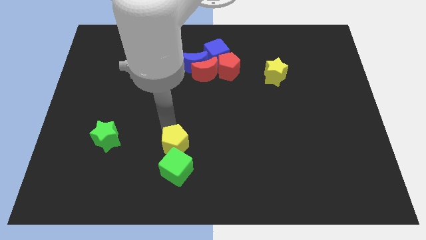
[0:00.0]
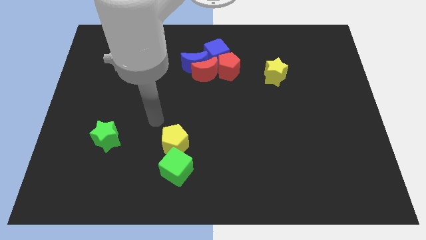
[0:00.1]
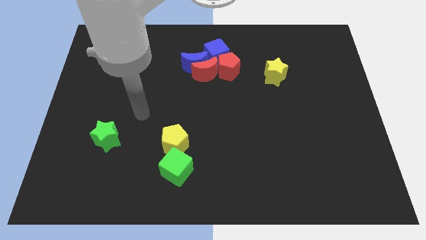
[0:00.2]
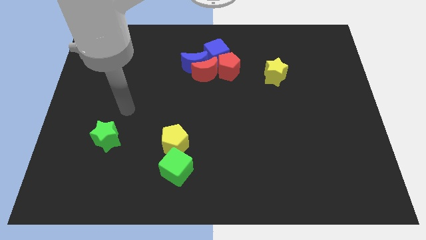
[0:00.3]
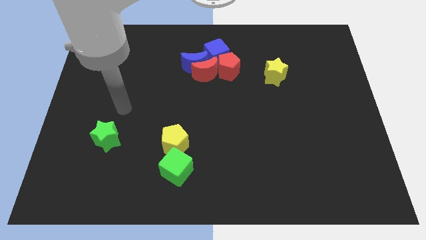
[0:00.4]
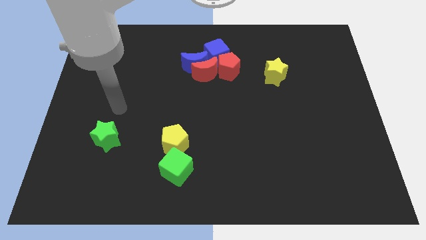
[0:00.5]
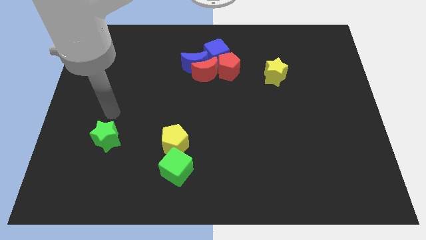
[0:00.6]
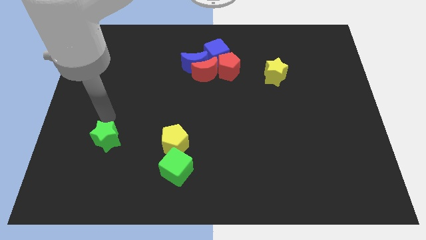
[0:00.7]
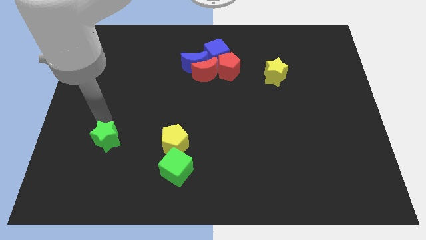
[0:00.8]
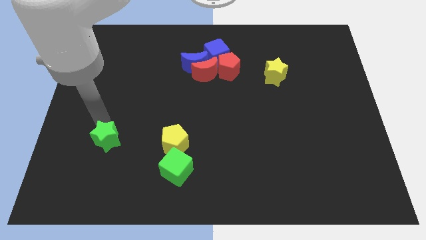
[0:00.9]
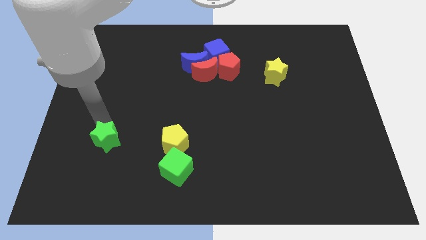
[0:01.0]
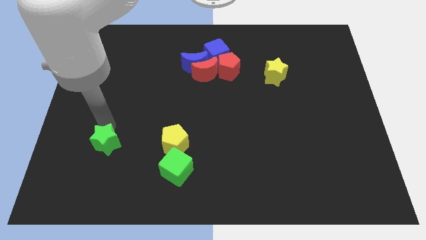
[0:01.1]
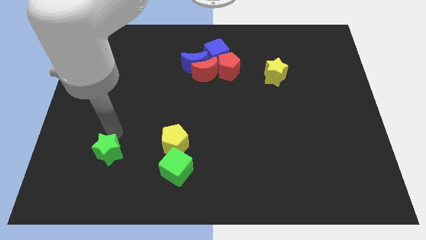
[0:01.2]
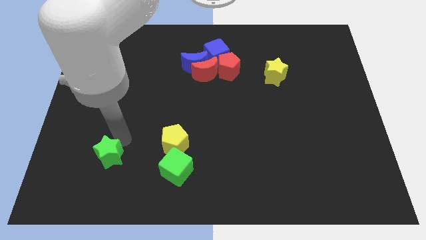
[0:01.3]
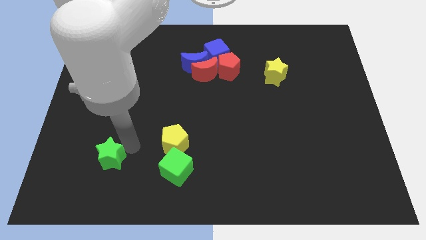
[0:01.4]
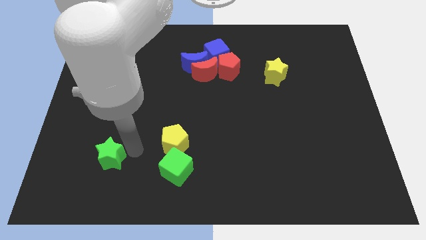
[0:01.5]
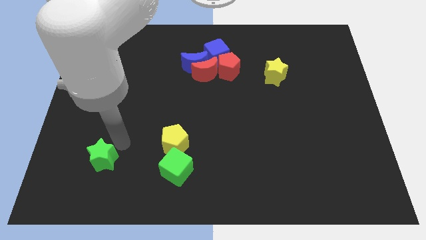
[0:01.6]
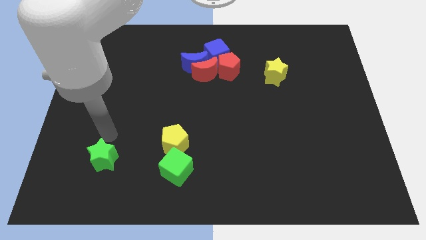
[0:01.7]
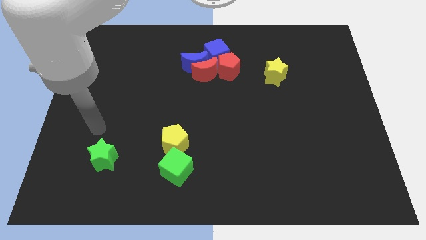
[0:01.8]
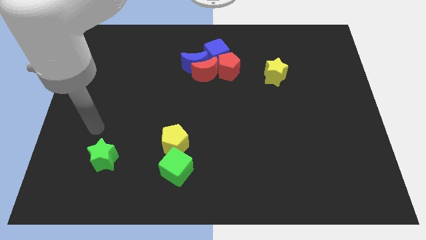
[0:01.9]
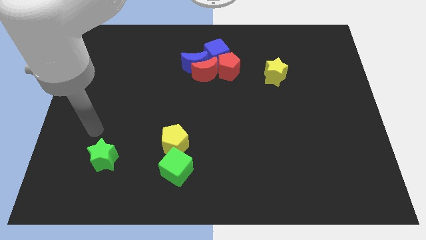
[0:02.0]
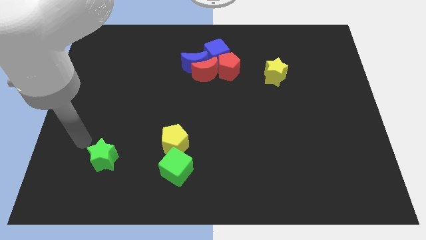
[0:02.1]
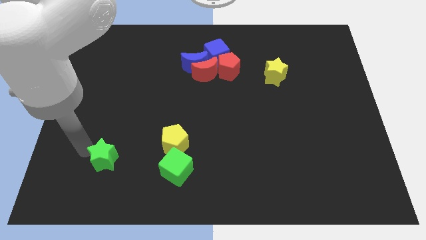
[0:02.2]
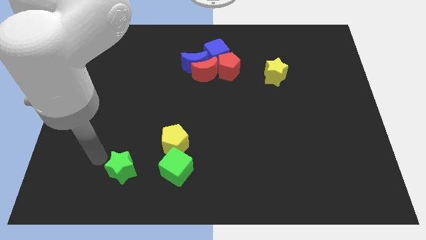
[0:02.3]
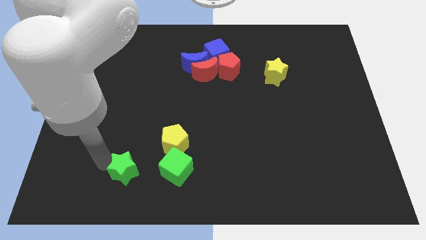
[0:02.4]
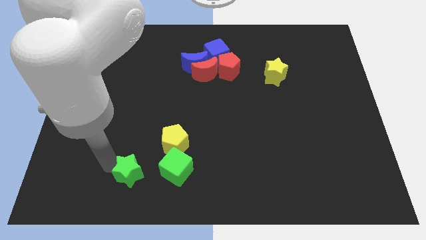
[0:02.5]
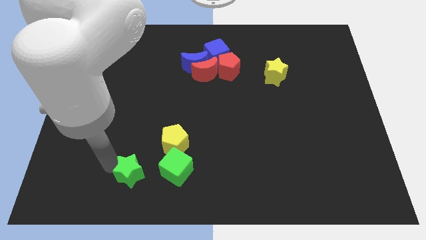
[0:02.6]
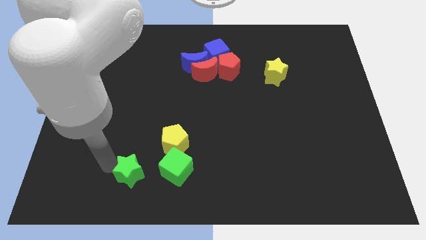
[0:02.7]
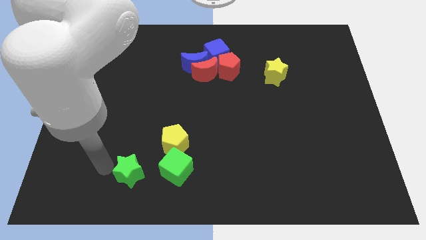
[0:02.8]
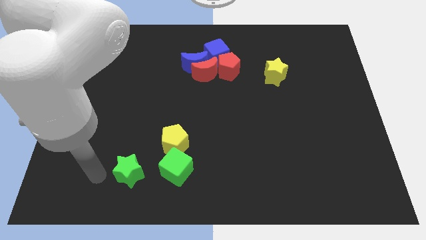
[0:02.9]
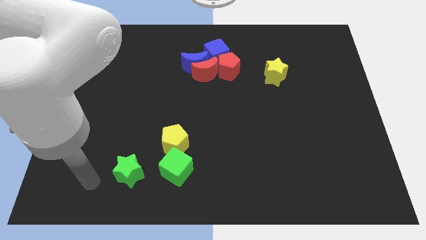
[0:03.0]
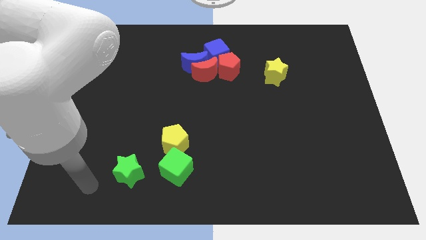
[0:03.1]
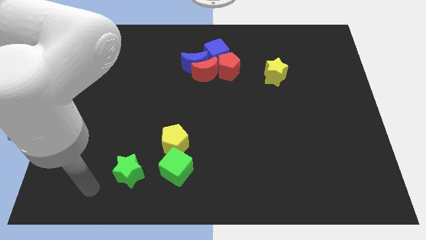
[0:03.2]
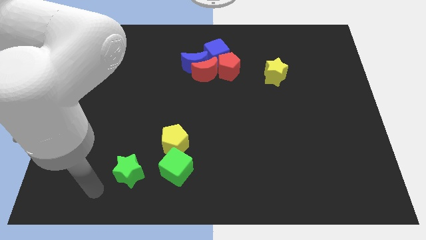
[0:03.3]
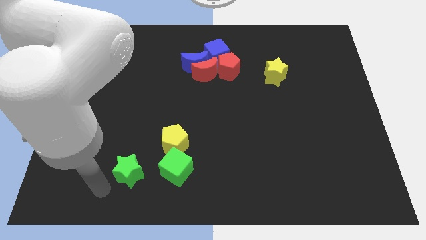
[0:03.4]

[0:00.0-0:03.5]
move the green star to the left of the green cube

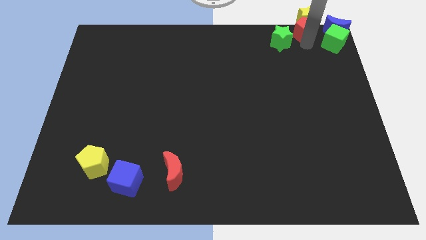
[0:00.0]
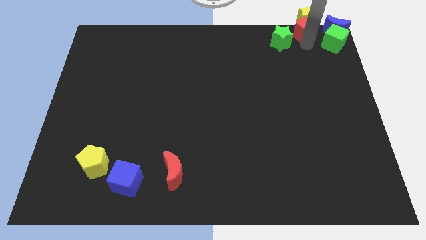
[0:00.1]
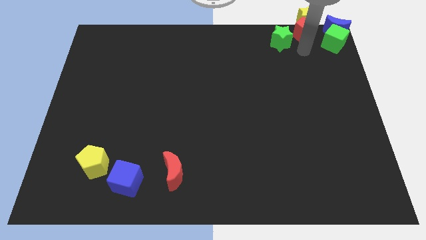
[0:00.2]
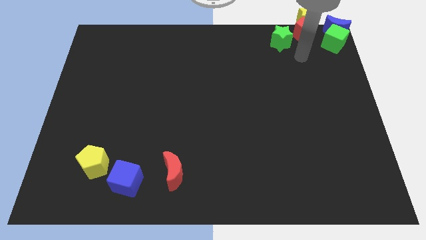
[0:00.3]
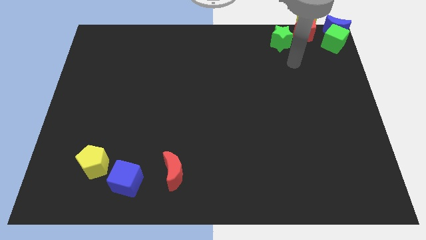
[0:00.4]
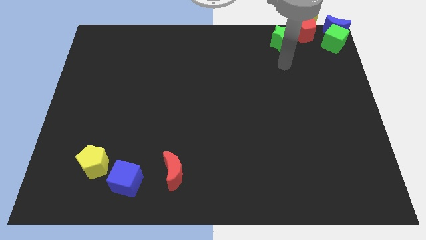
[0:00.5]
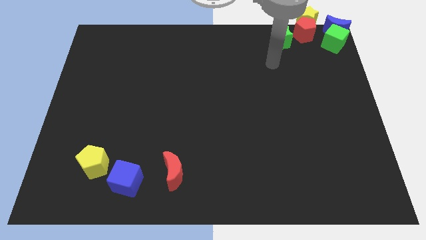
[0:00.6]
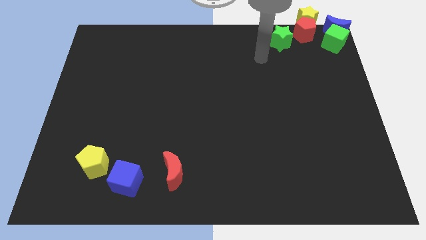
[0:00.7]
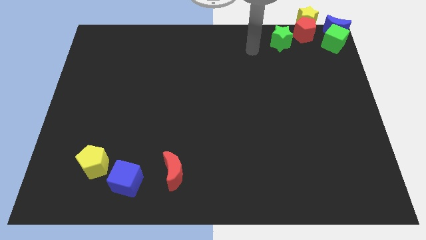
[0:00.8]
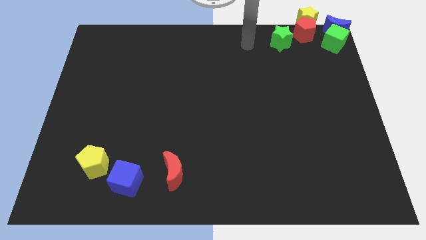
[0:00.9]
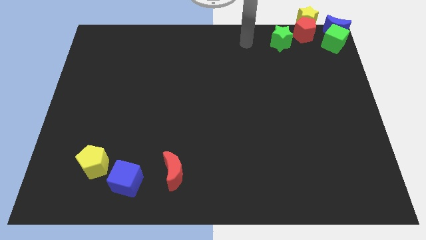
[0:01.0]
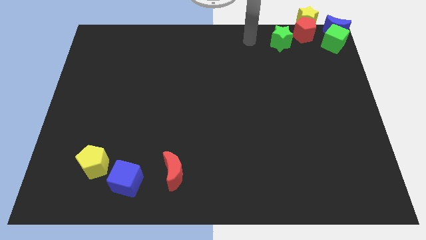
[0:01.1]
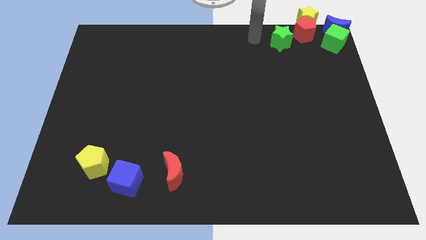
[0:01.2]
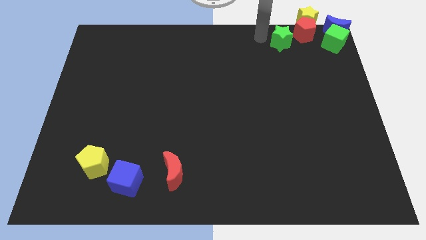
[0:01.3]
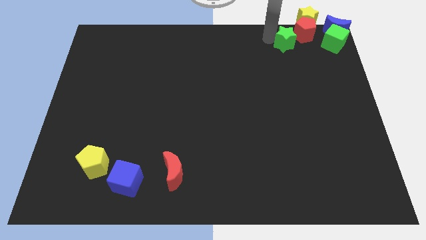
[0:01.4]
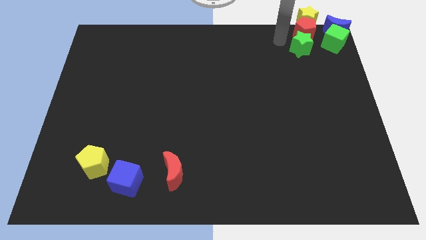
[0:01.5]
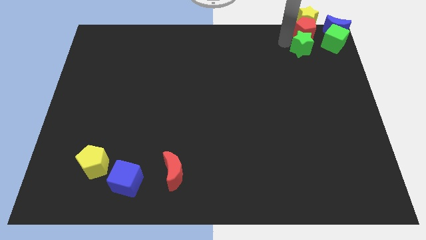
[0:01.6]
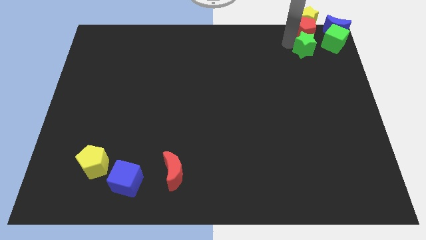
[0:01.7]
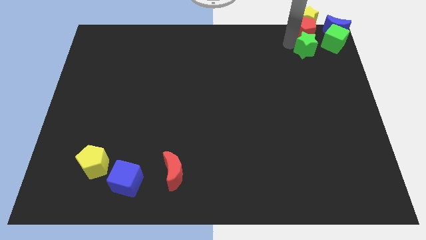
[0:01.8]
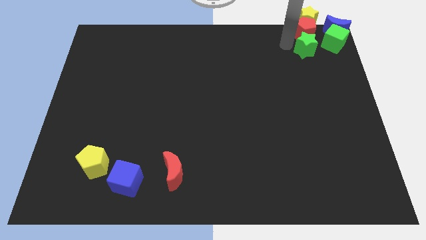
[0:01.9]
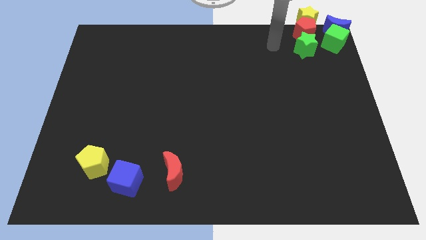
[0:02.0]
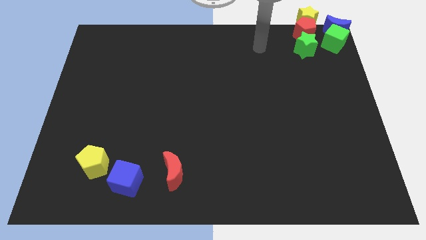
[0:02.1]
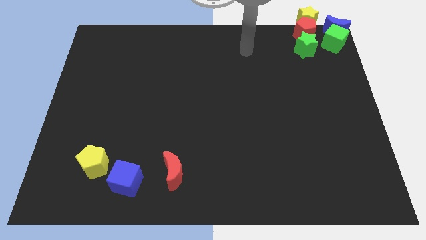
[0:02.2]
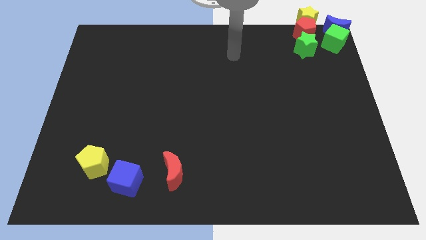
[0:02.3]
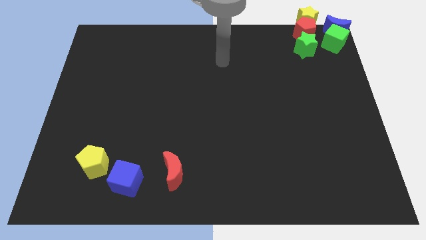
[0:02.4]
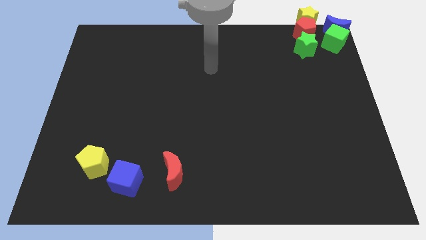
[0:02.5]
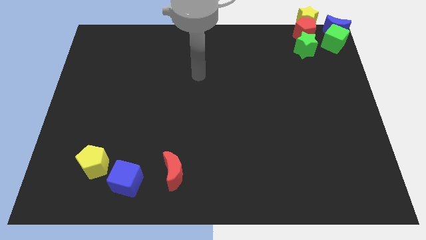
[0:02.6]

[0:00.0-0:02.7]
place the green star down to the red pentagon

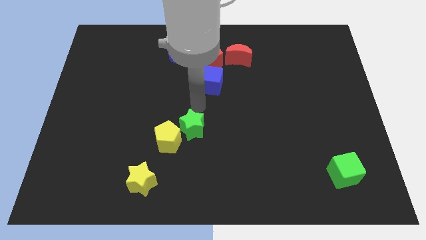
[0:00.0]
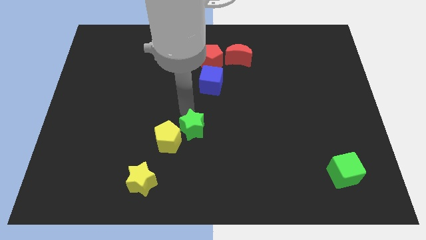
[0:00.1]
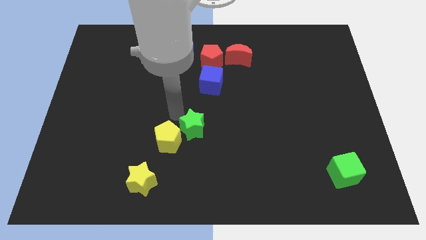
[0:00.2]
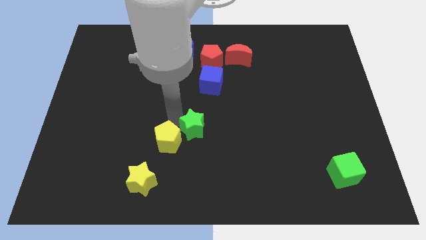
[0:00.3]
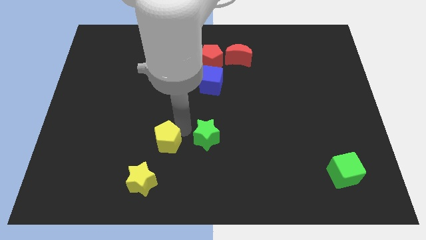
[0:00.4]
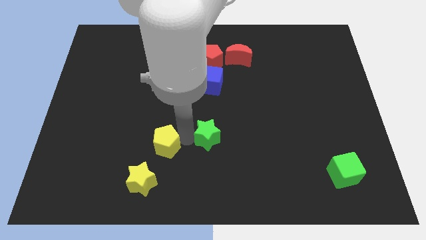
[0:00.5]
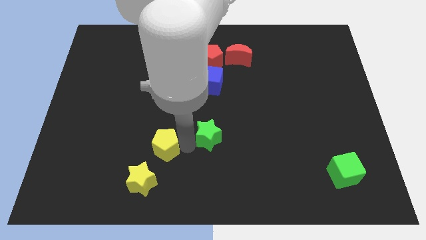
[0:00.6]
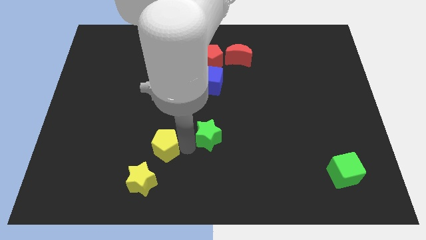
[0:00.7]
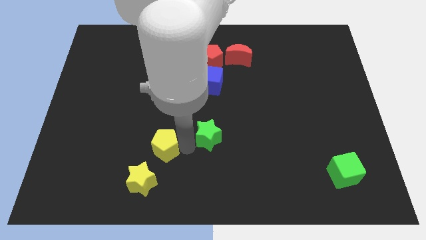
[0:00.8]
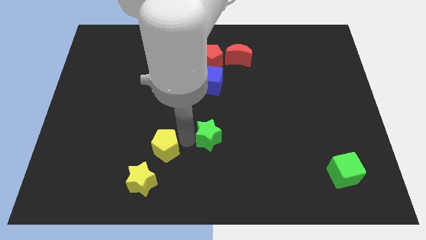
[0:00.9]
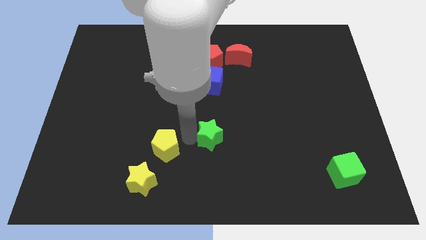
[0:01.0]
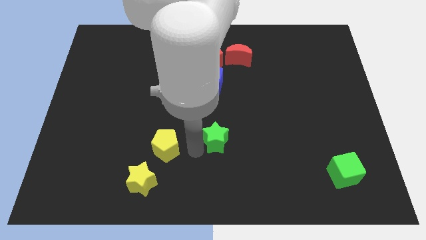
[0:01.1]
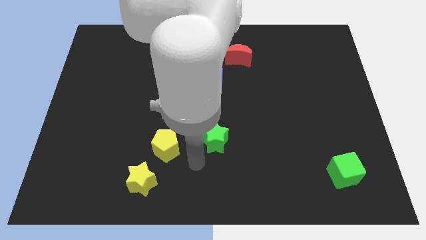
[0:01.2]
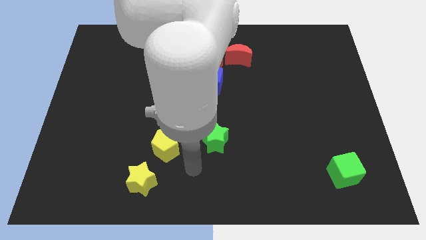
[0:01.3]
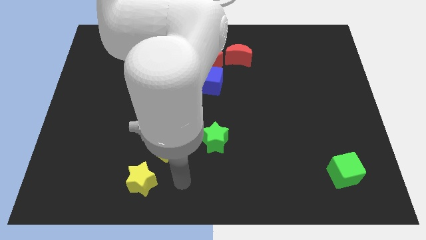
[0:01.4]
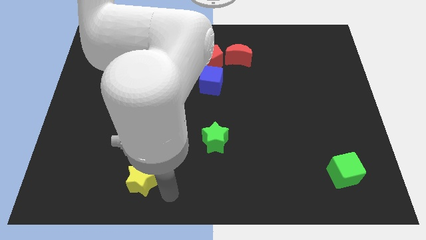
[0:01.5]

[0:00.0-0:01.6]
push green star away from the yellow pentagon

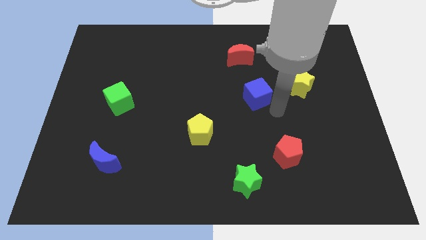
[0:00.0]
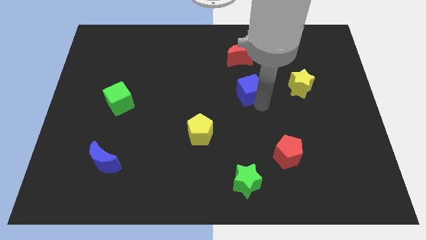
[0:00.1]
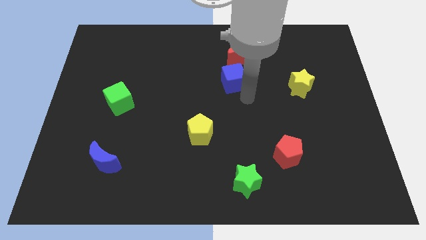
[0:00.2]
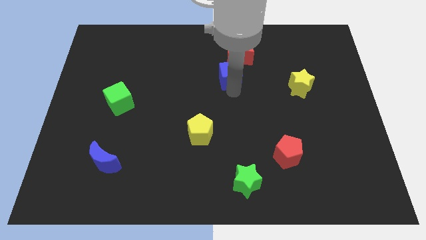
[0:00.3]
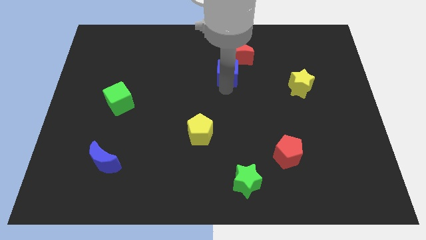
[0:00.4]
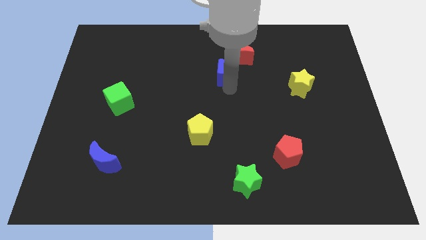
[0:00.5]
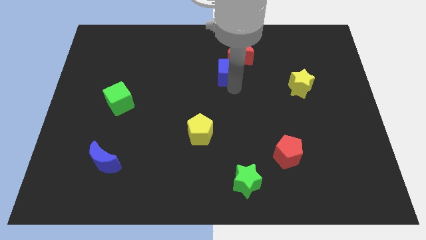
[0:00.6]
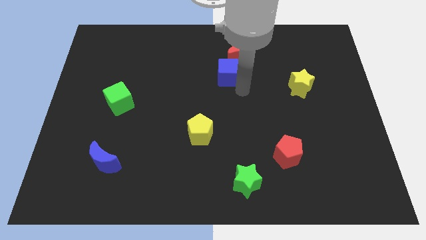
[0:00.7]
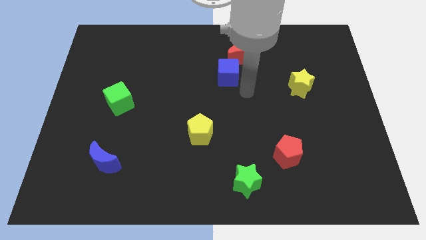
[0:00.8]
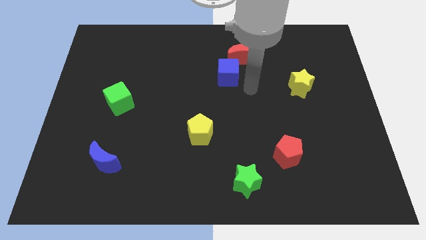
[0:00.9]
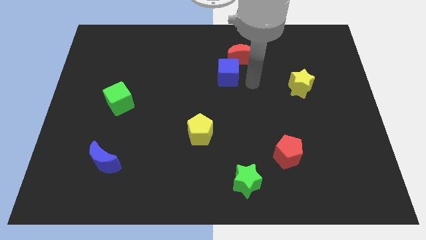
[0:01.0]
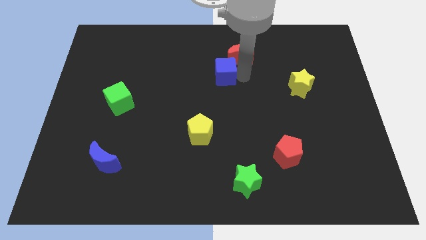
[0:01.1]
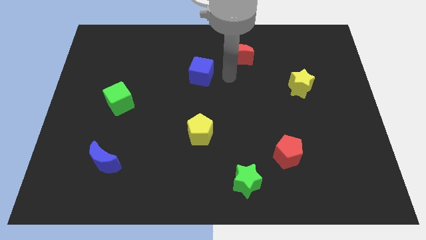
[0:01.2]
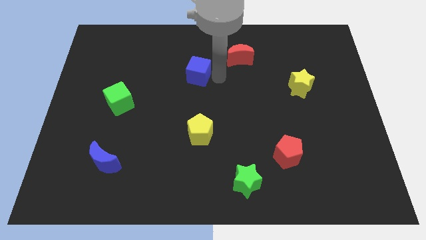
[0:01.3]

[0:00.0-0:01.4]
place the blue cube vertically above the yellow pentagon
